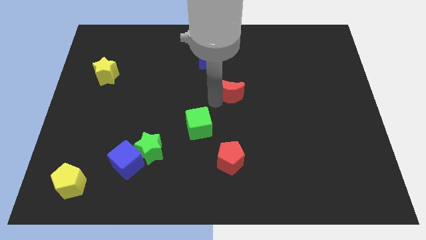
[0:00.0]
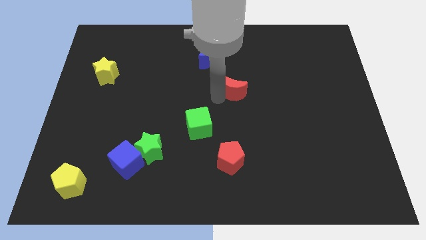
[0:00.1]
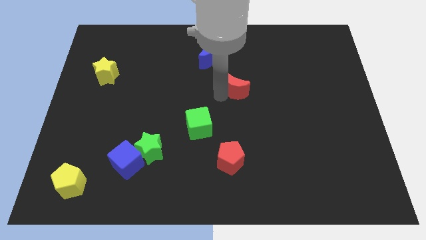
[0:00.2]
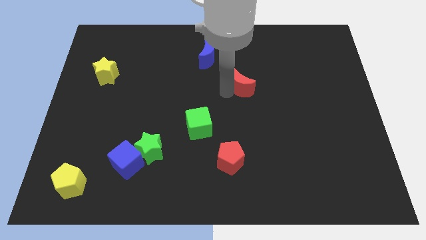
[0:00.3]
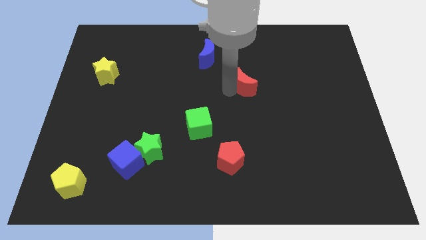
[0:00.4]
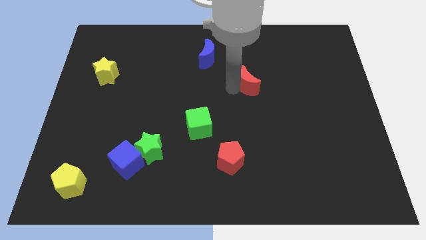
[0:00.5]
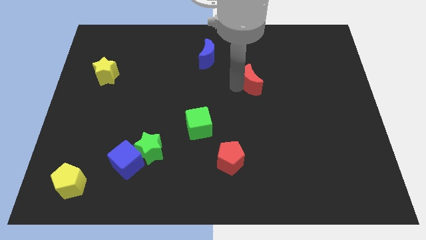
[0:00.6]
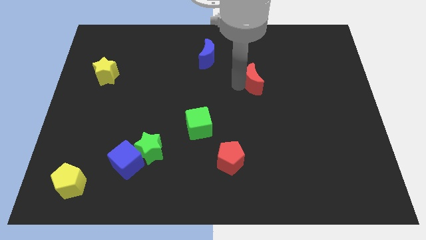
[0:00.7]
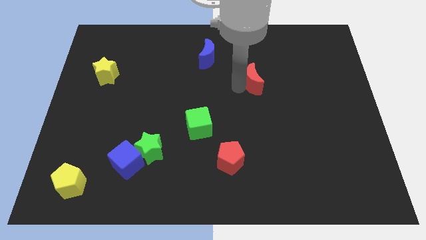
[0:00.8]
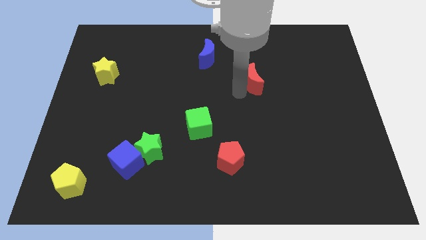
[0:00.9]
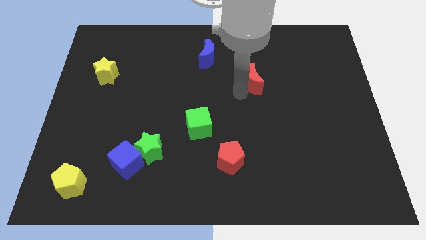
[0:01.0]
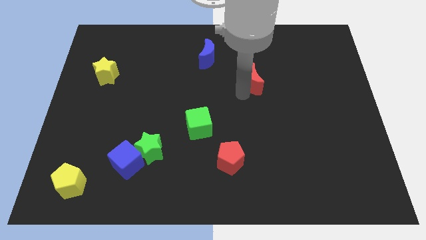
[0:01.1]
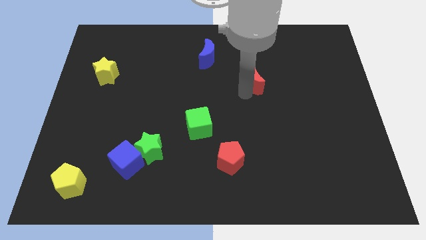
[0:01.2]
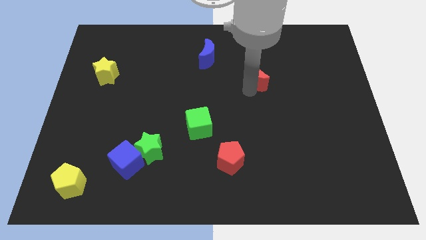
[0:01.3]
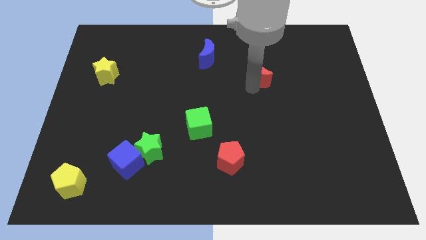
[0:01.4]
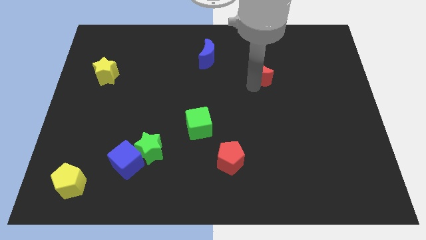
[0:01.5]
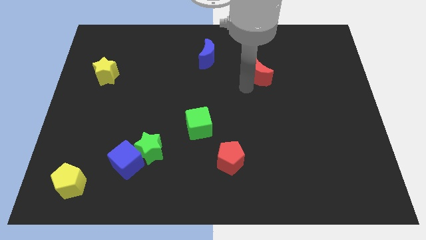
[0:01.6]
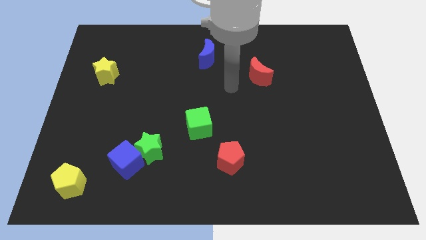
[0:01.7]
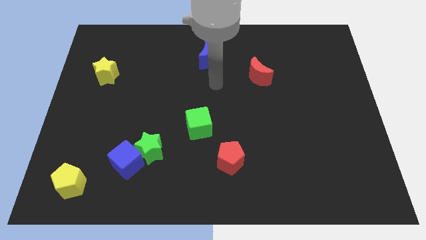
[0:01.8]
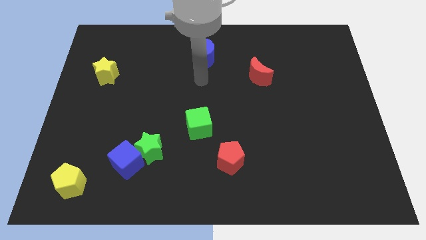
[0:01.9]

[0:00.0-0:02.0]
move the red crescnet towards top right side of the board

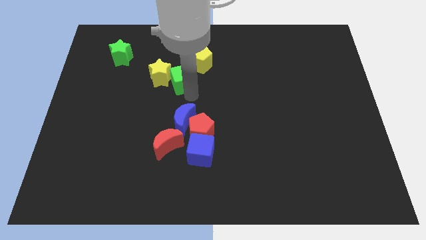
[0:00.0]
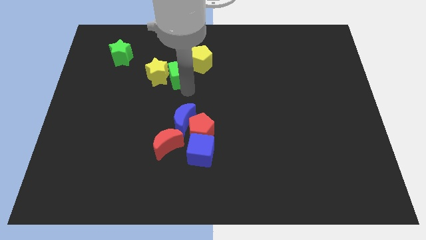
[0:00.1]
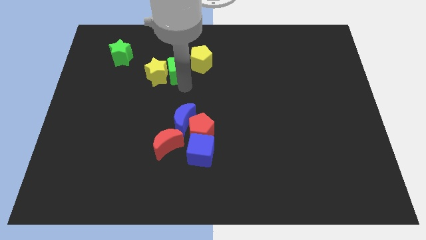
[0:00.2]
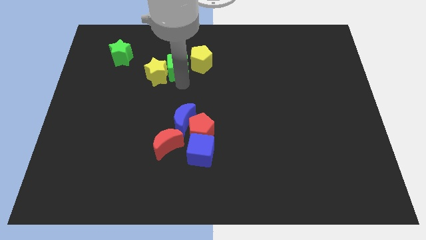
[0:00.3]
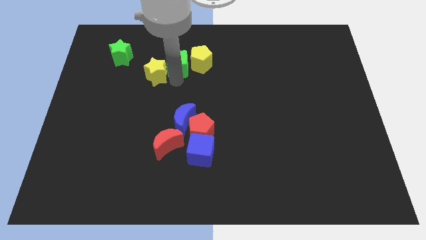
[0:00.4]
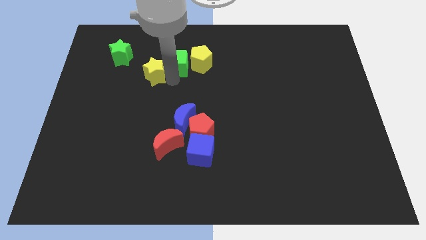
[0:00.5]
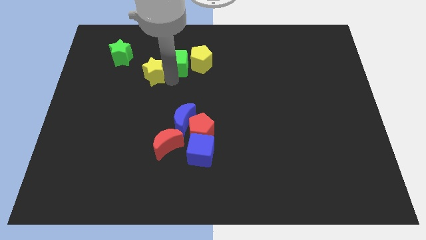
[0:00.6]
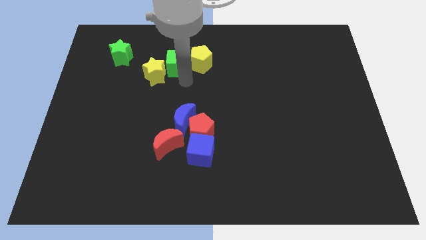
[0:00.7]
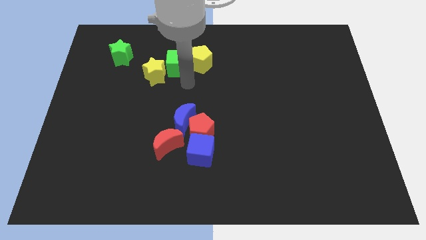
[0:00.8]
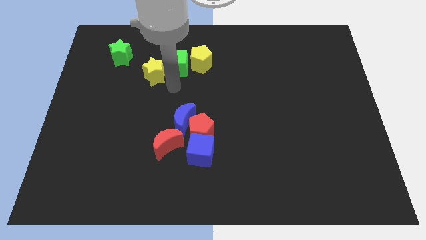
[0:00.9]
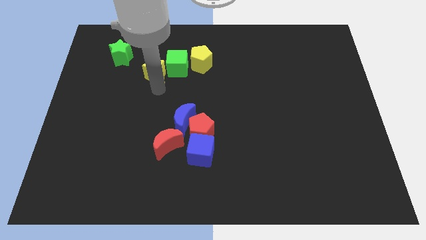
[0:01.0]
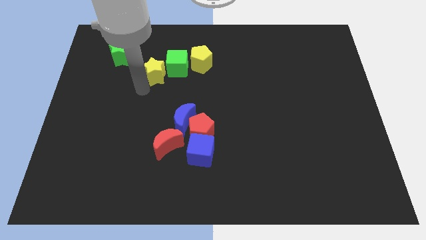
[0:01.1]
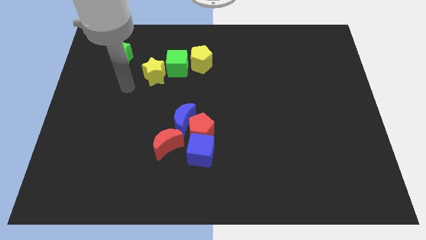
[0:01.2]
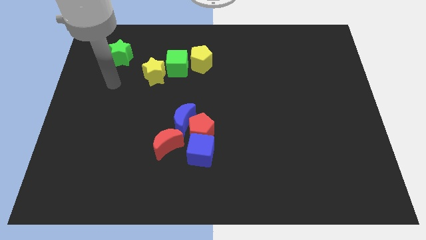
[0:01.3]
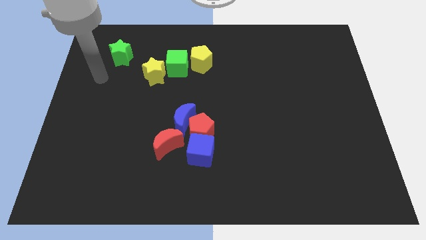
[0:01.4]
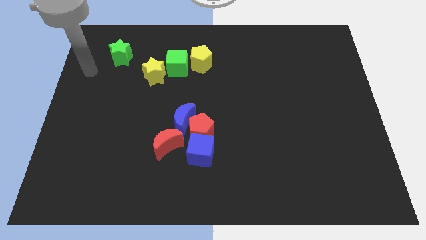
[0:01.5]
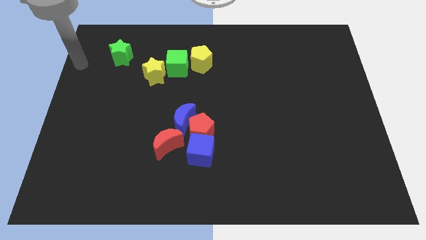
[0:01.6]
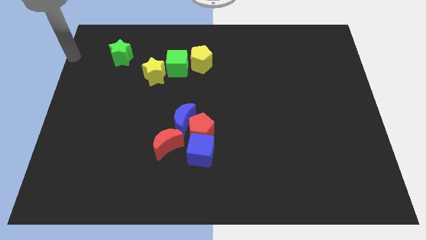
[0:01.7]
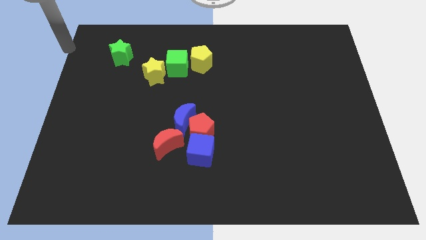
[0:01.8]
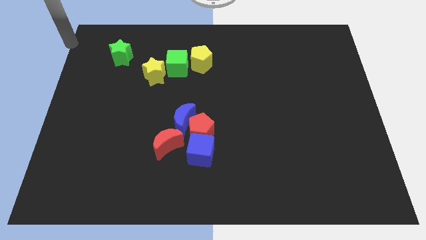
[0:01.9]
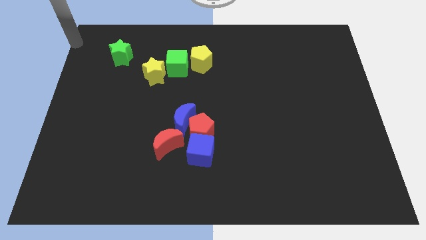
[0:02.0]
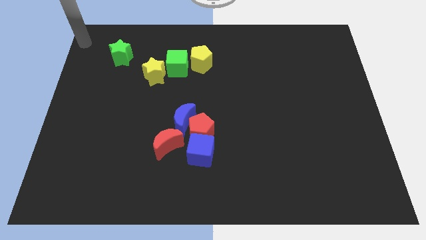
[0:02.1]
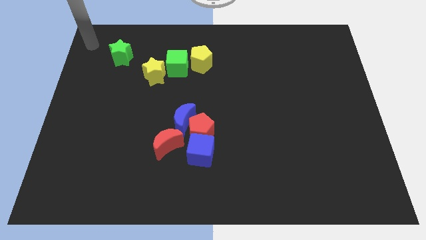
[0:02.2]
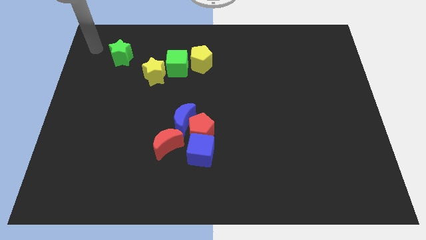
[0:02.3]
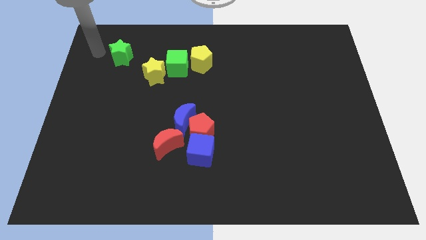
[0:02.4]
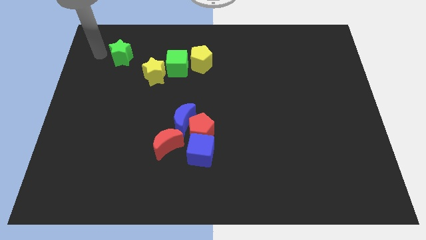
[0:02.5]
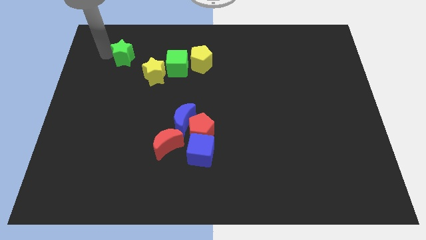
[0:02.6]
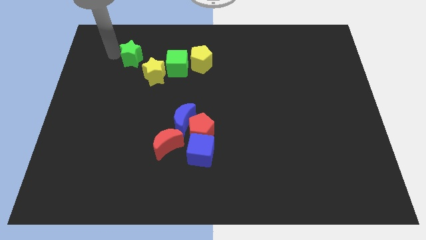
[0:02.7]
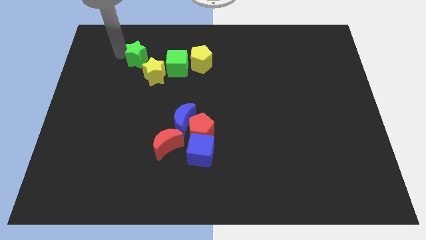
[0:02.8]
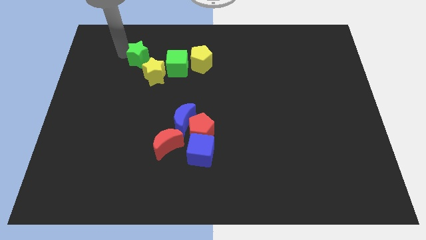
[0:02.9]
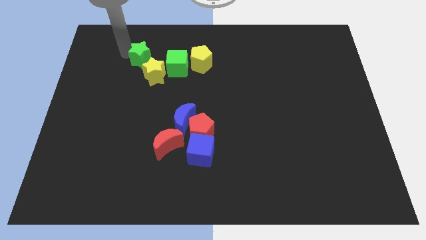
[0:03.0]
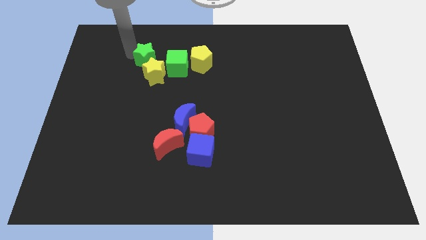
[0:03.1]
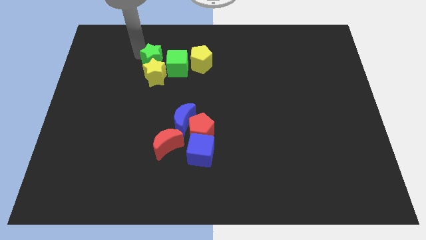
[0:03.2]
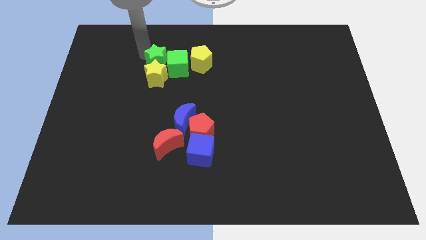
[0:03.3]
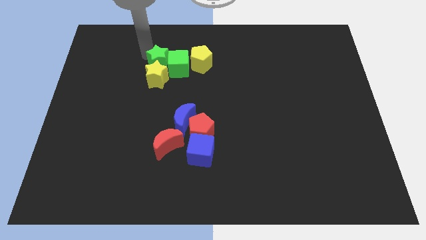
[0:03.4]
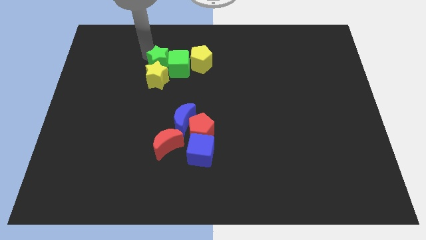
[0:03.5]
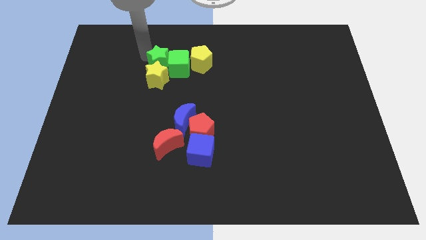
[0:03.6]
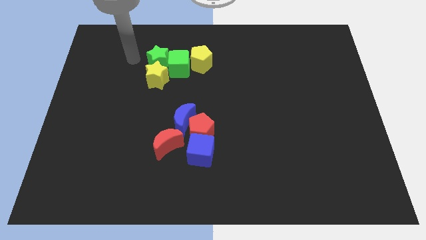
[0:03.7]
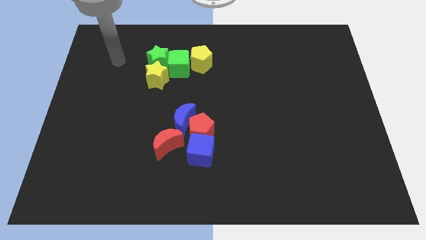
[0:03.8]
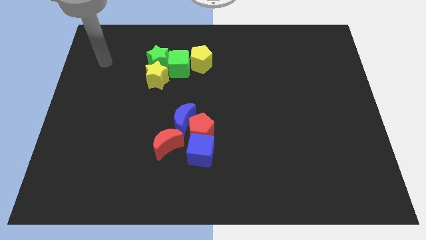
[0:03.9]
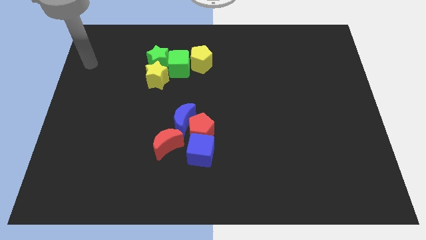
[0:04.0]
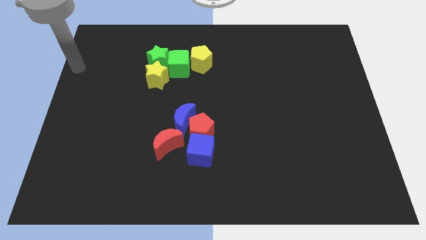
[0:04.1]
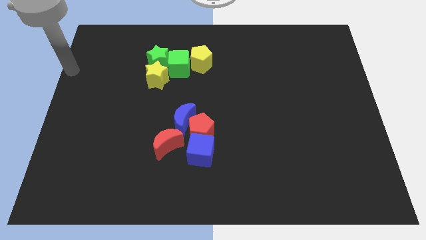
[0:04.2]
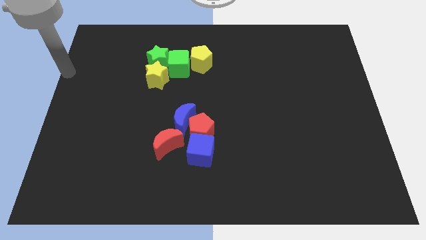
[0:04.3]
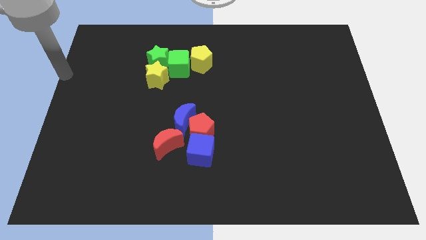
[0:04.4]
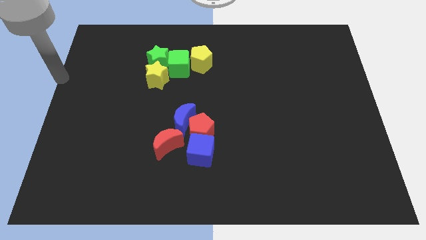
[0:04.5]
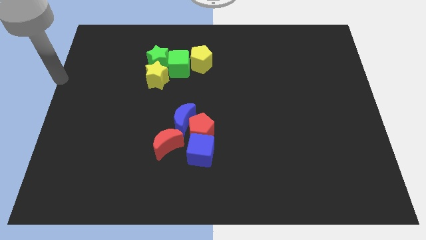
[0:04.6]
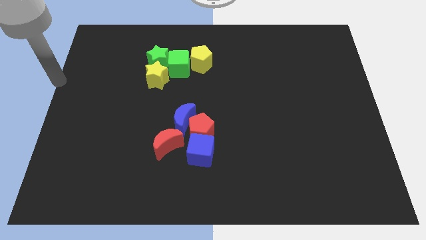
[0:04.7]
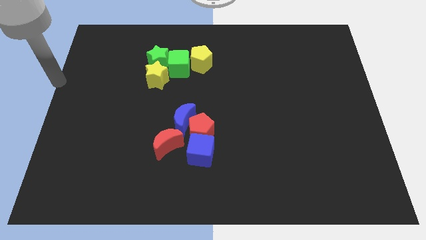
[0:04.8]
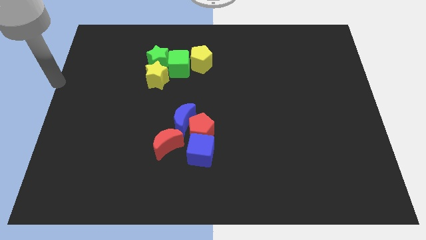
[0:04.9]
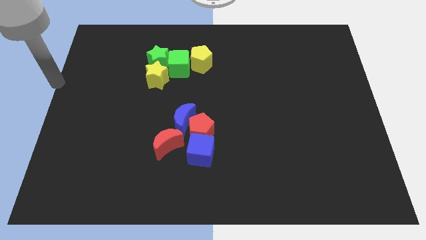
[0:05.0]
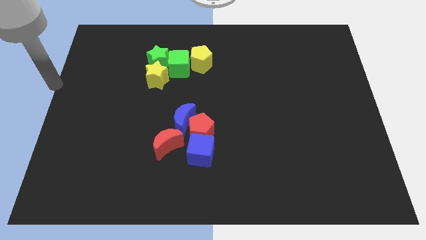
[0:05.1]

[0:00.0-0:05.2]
group up the green blocks with the yellow blocks at the top side of the table

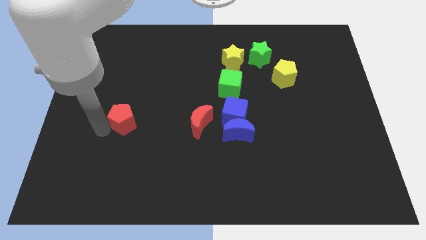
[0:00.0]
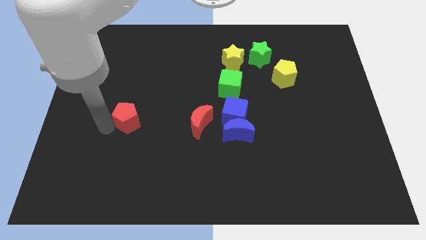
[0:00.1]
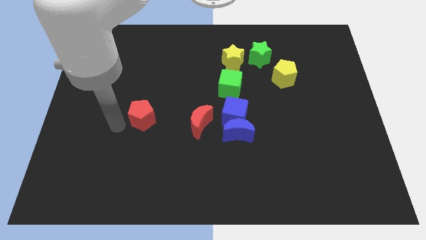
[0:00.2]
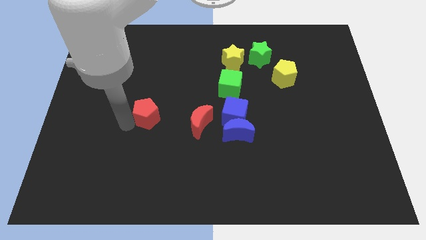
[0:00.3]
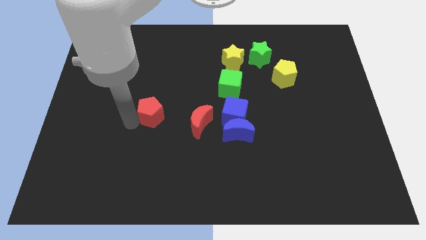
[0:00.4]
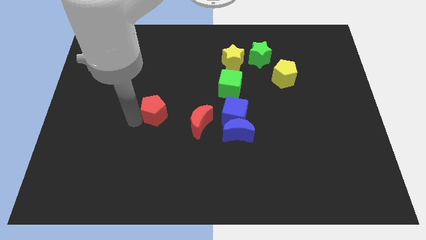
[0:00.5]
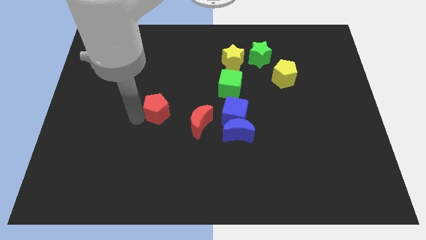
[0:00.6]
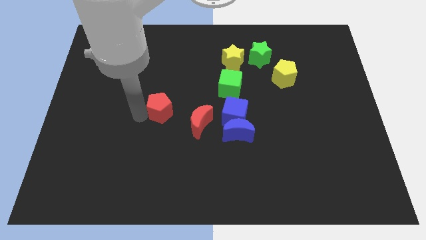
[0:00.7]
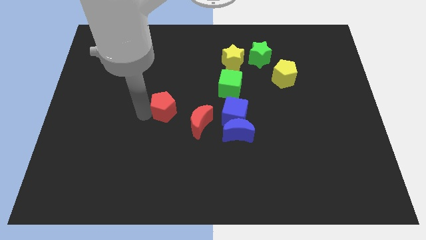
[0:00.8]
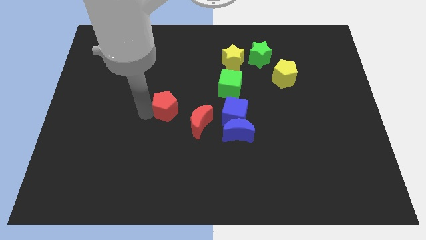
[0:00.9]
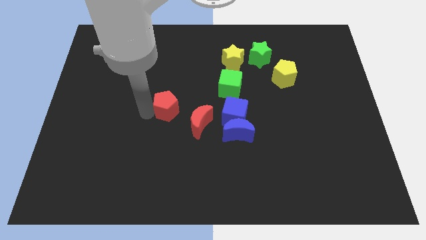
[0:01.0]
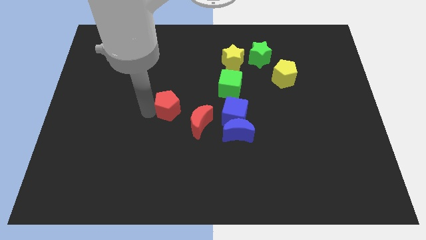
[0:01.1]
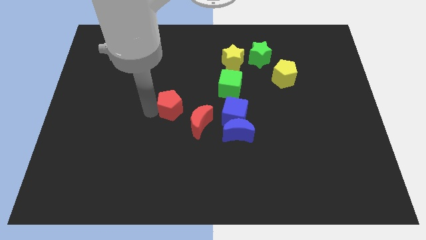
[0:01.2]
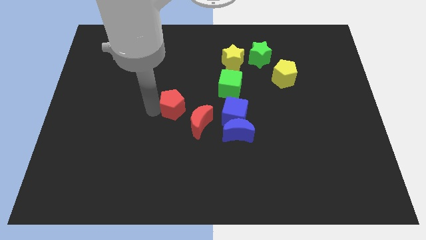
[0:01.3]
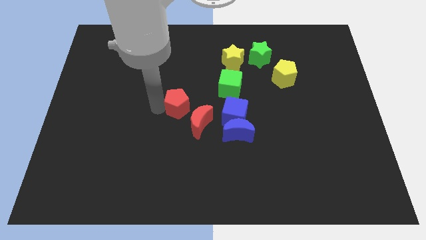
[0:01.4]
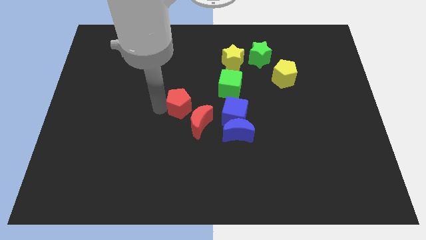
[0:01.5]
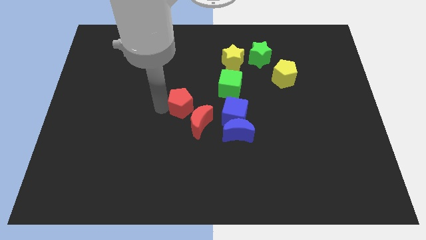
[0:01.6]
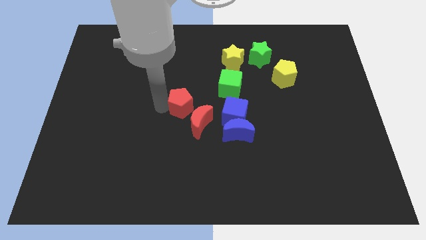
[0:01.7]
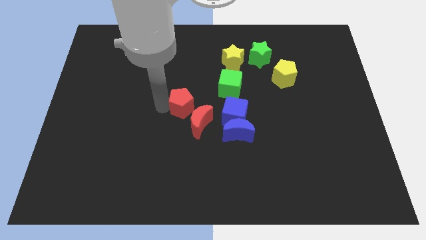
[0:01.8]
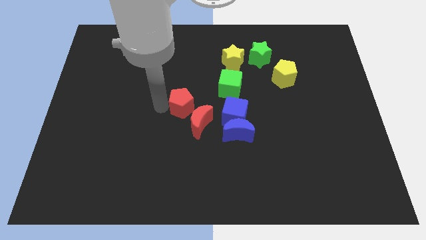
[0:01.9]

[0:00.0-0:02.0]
put the red pentagon at the top left side of the red moon
